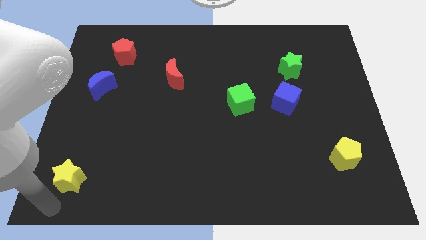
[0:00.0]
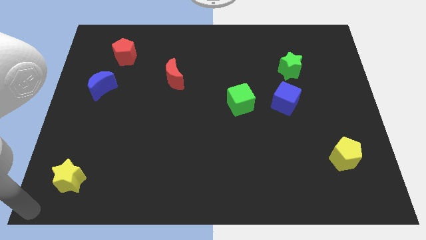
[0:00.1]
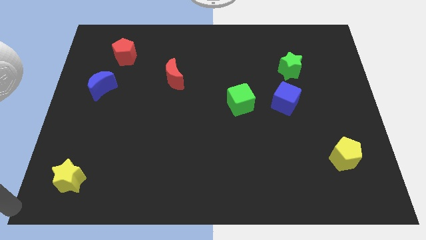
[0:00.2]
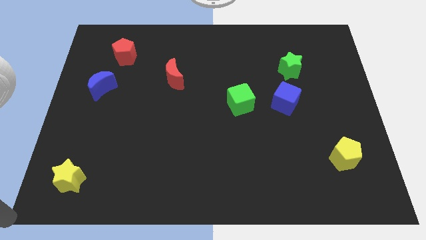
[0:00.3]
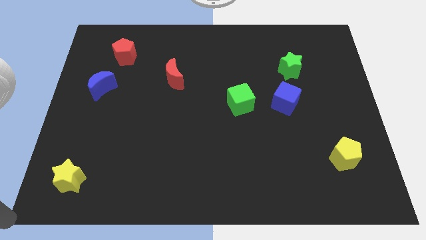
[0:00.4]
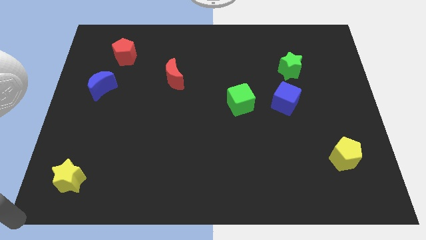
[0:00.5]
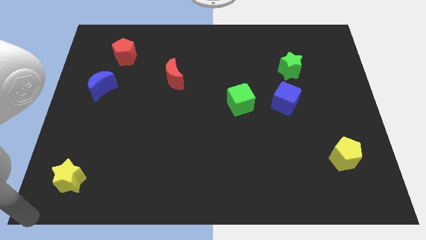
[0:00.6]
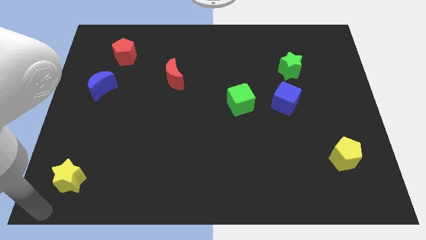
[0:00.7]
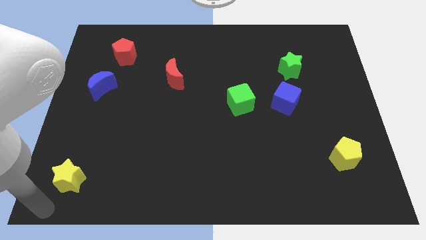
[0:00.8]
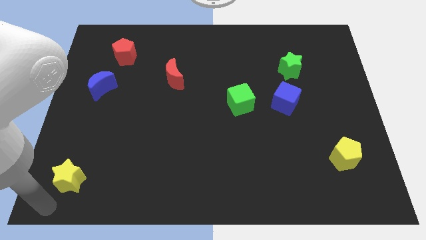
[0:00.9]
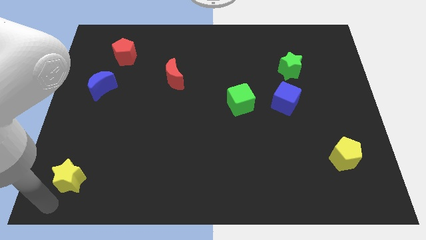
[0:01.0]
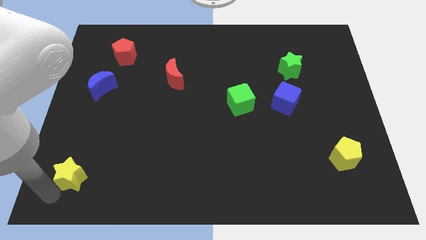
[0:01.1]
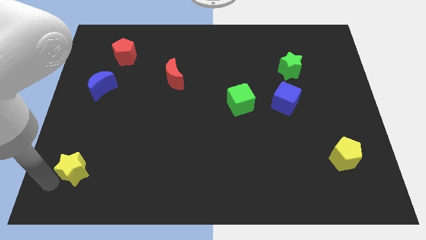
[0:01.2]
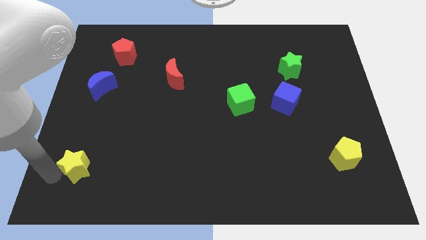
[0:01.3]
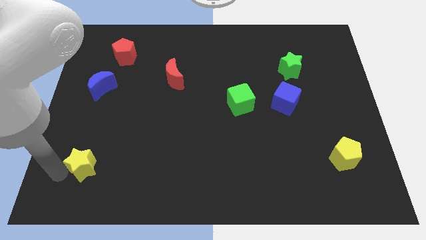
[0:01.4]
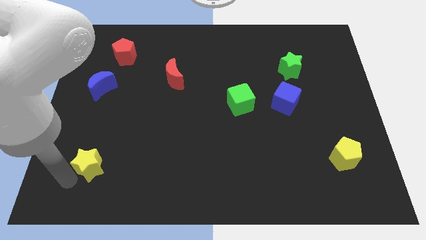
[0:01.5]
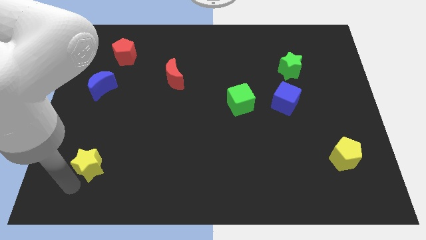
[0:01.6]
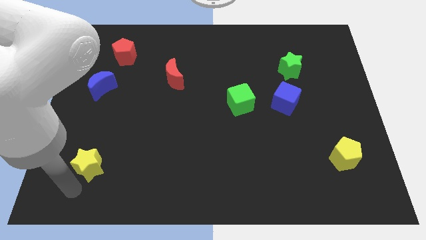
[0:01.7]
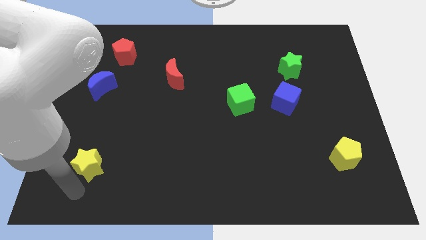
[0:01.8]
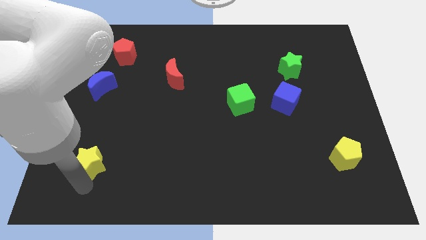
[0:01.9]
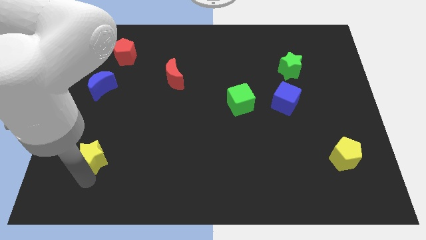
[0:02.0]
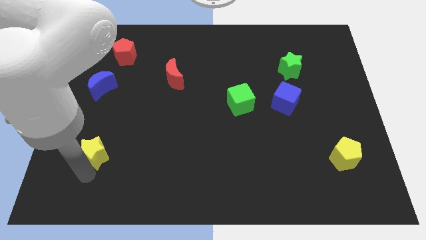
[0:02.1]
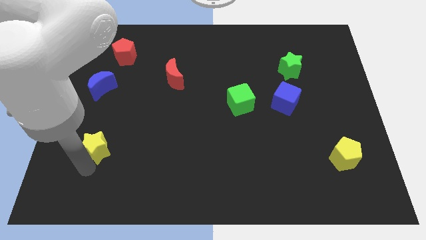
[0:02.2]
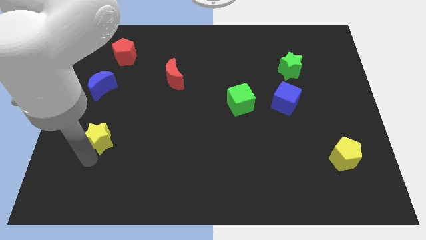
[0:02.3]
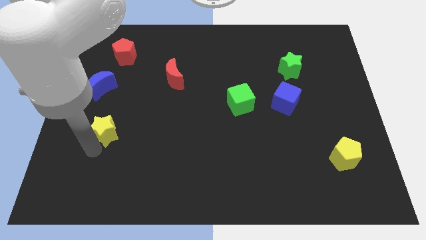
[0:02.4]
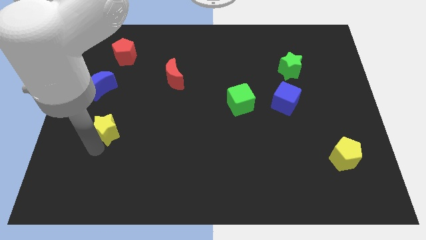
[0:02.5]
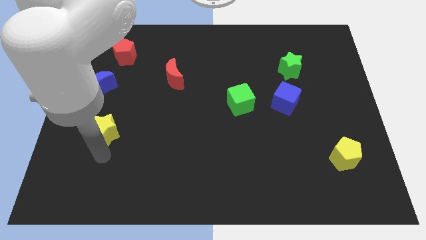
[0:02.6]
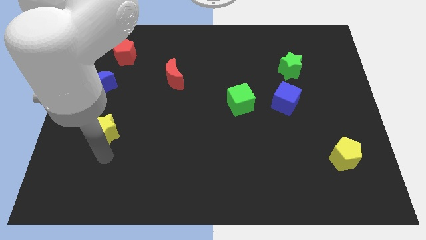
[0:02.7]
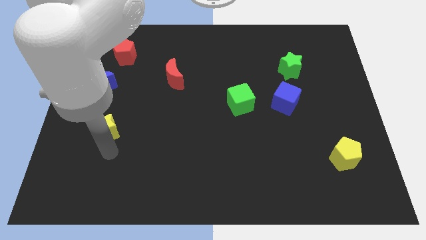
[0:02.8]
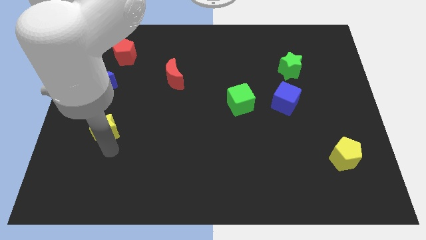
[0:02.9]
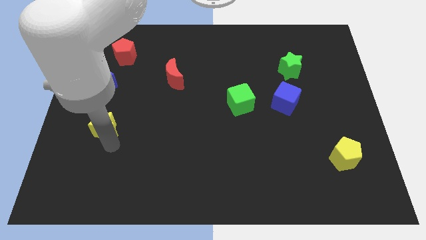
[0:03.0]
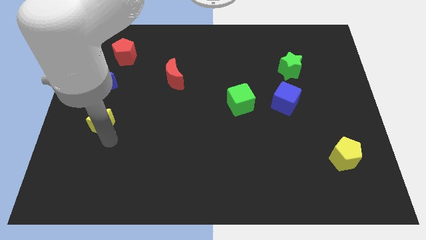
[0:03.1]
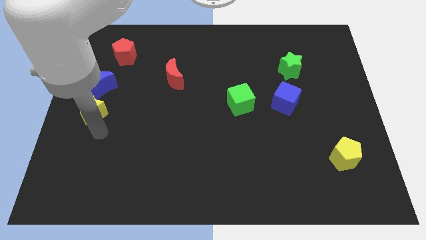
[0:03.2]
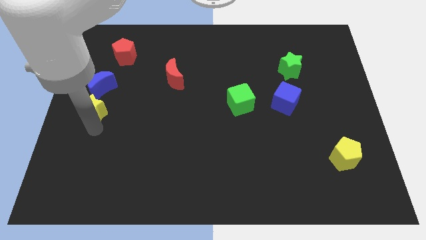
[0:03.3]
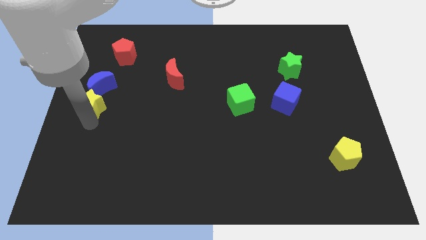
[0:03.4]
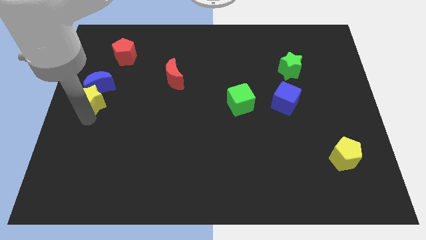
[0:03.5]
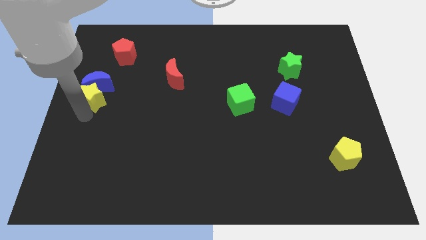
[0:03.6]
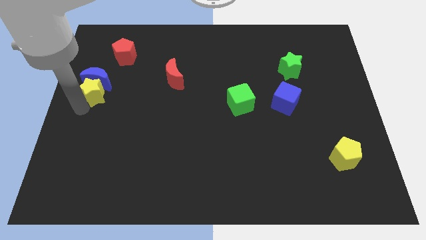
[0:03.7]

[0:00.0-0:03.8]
place yellow star below blue crescent

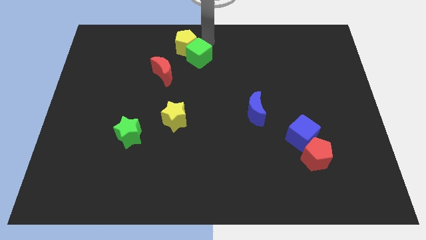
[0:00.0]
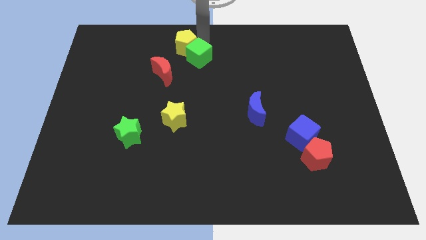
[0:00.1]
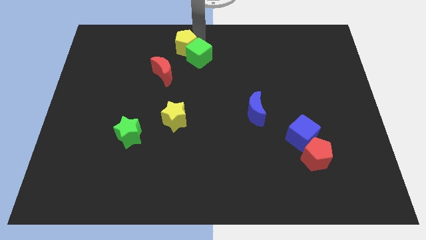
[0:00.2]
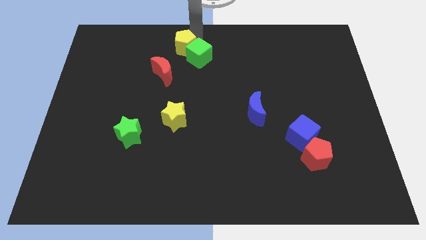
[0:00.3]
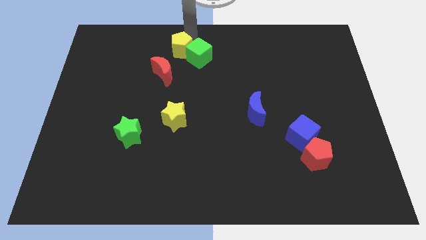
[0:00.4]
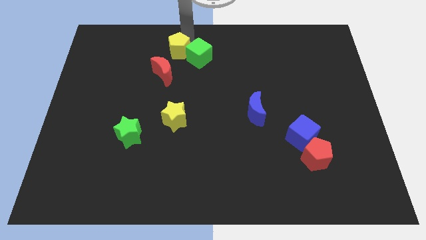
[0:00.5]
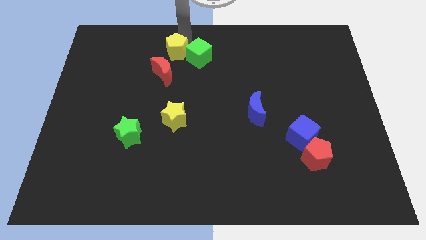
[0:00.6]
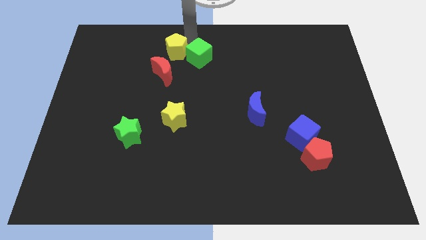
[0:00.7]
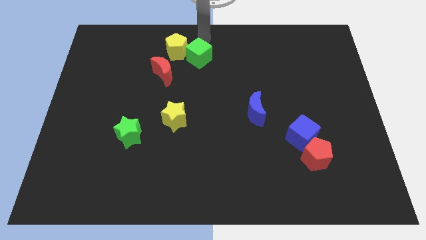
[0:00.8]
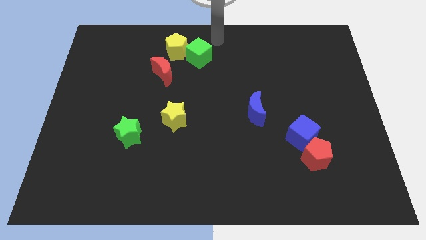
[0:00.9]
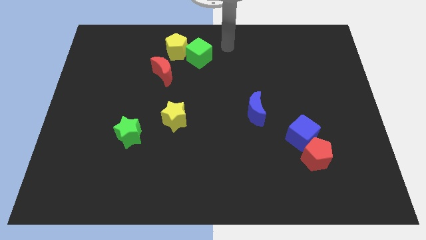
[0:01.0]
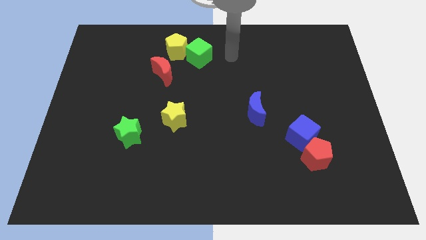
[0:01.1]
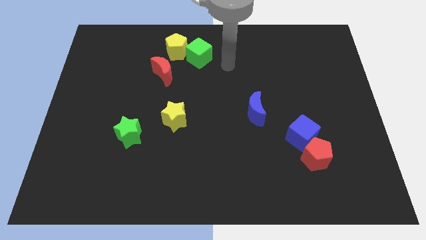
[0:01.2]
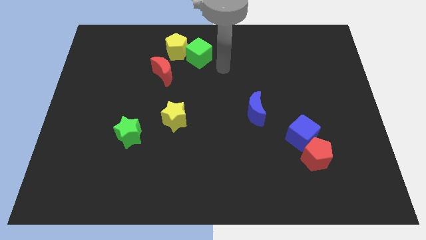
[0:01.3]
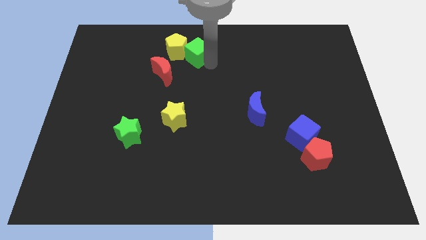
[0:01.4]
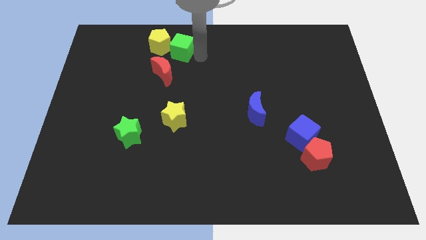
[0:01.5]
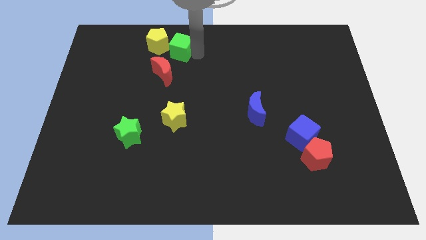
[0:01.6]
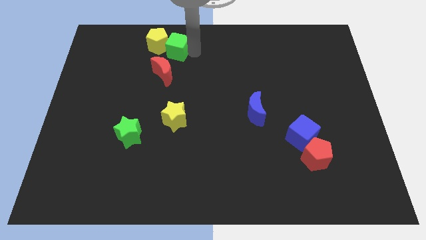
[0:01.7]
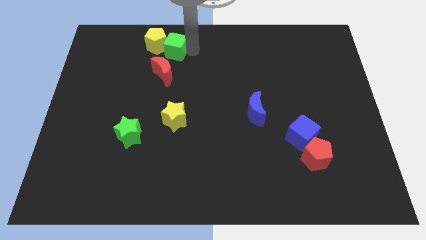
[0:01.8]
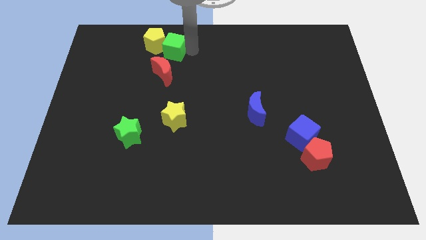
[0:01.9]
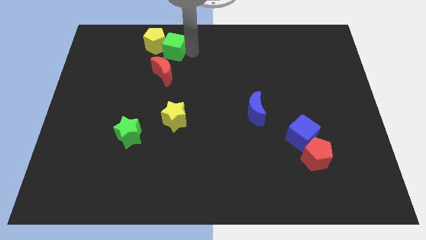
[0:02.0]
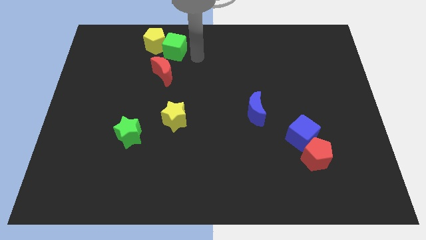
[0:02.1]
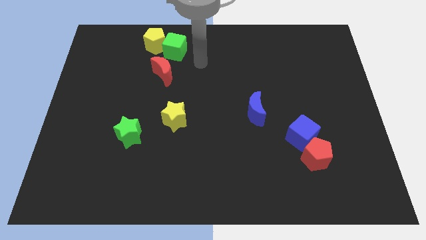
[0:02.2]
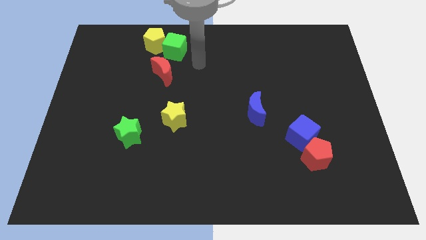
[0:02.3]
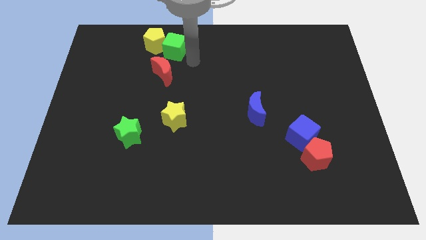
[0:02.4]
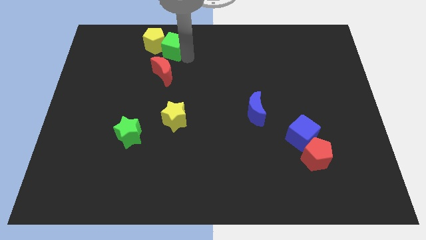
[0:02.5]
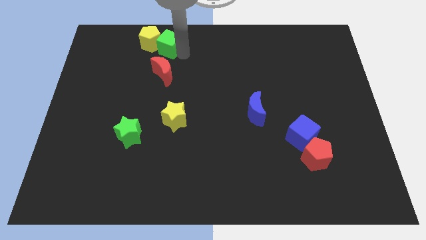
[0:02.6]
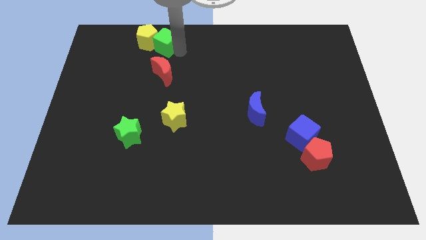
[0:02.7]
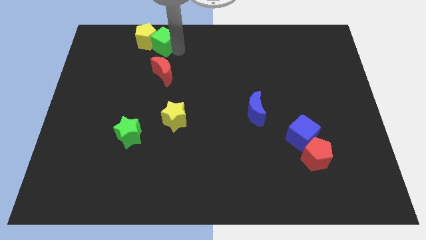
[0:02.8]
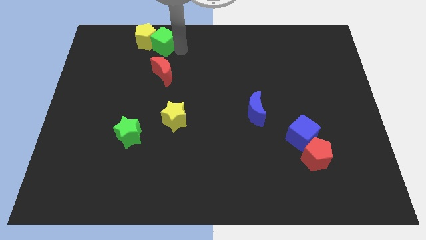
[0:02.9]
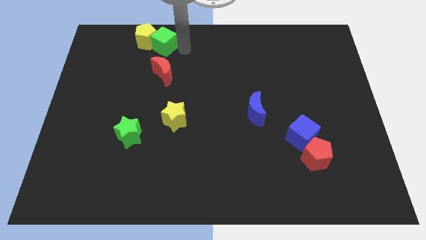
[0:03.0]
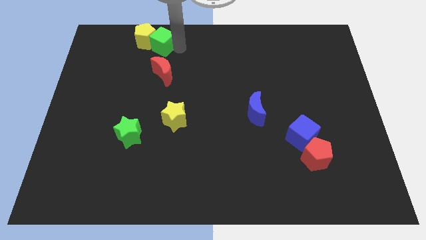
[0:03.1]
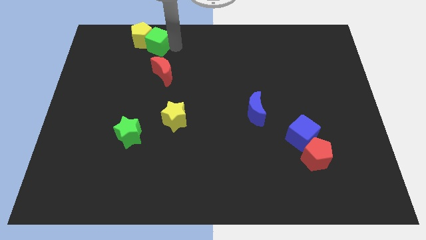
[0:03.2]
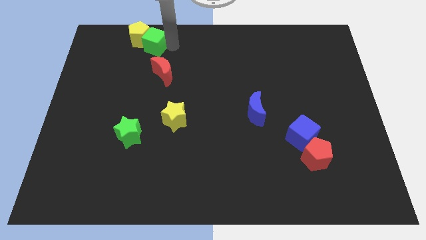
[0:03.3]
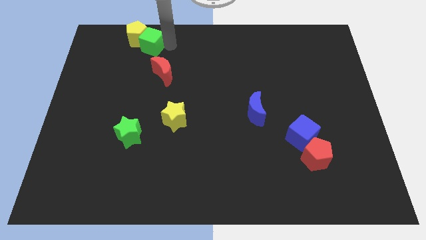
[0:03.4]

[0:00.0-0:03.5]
push the green cube along with the yellow pentagon towards the top left

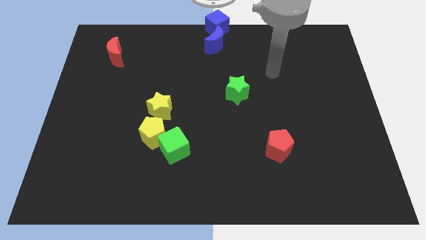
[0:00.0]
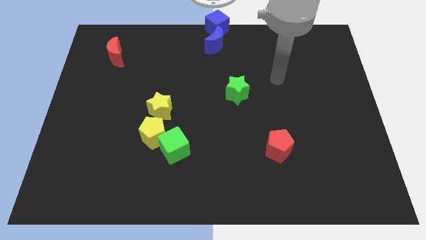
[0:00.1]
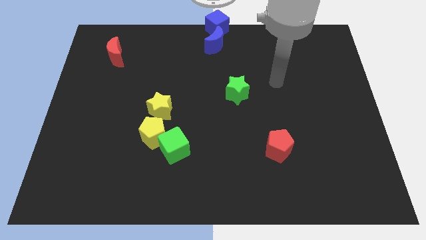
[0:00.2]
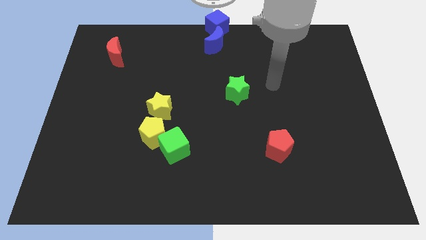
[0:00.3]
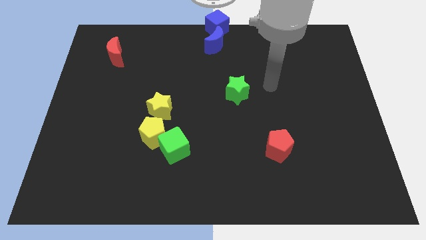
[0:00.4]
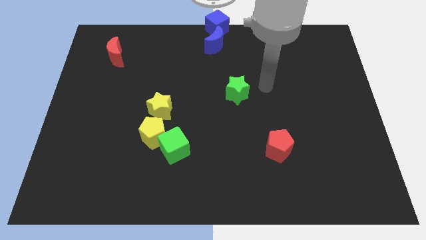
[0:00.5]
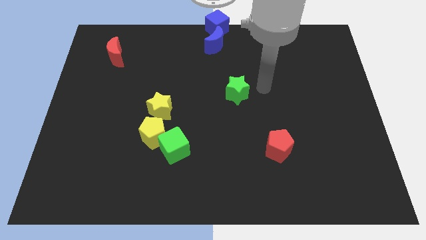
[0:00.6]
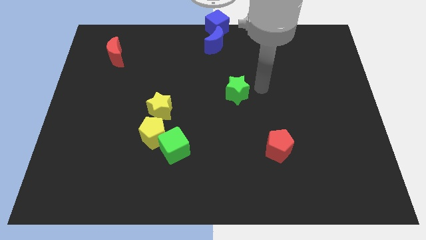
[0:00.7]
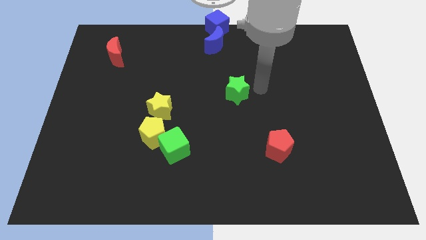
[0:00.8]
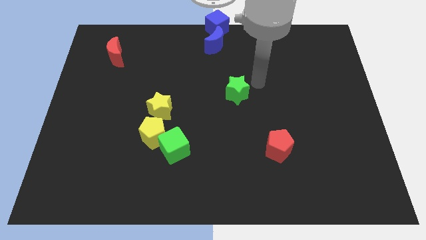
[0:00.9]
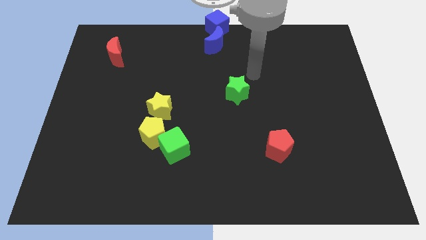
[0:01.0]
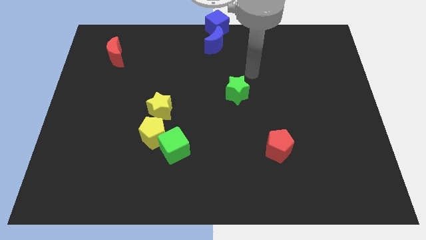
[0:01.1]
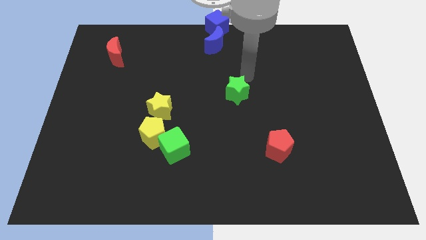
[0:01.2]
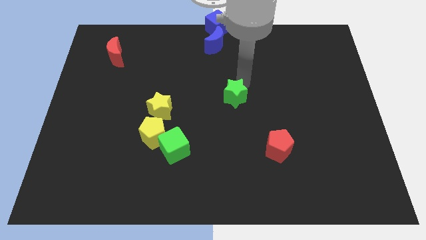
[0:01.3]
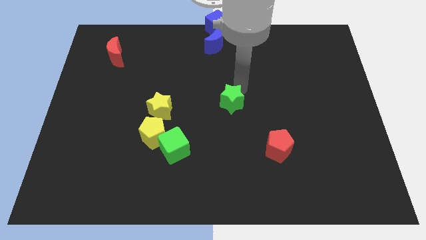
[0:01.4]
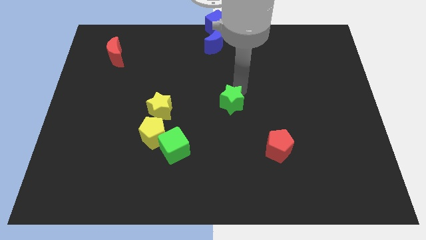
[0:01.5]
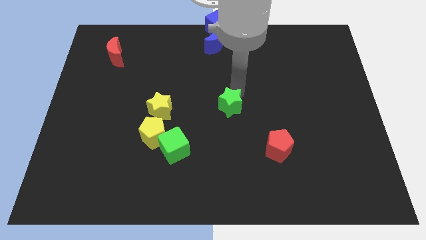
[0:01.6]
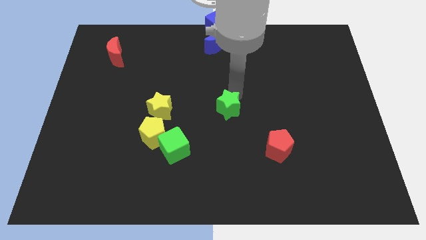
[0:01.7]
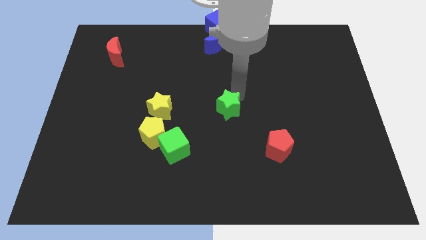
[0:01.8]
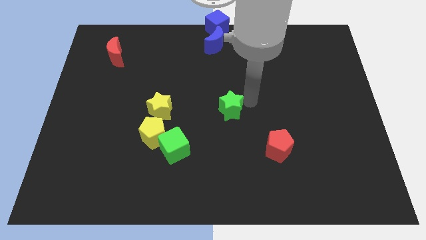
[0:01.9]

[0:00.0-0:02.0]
move star to the center
